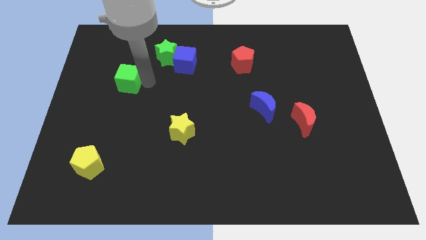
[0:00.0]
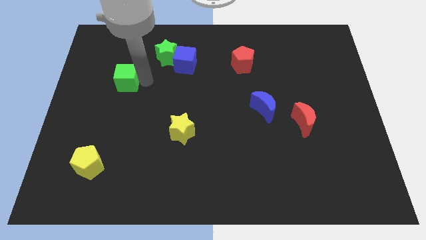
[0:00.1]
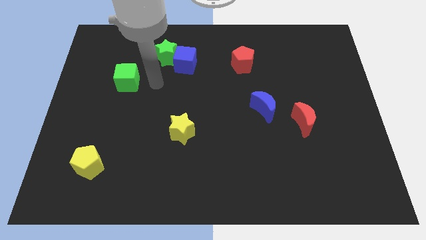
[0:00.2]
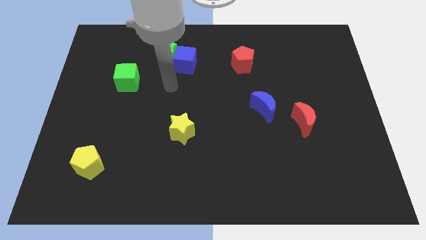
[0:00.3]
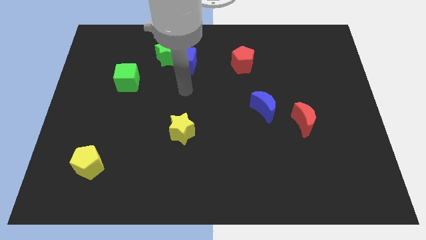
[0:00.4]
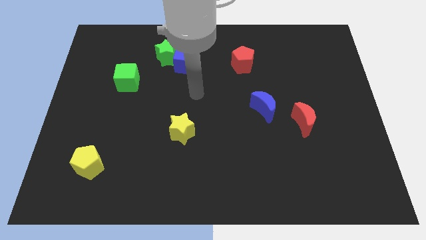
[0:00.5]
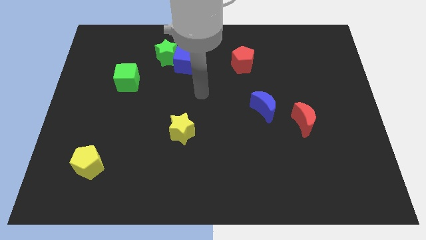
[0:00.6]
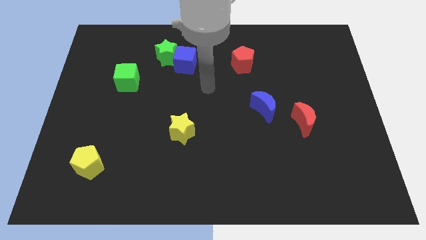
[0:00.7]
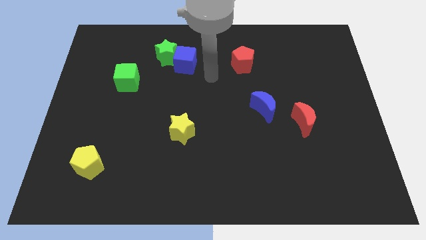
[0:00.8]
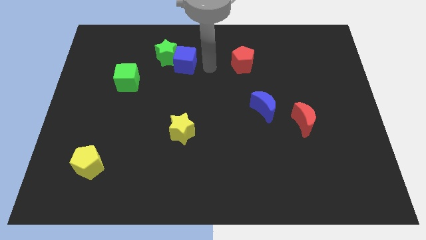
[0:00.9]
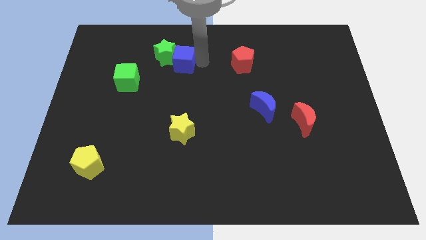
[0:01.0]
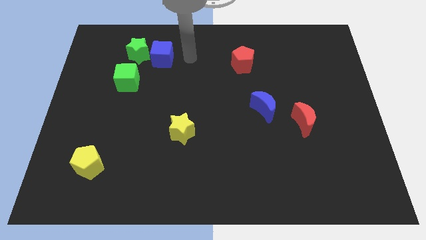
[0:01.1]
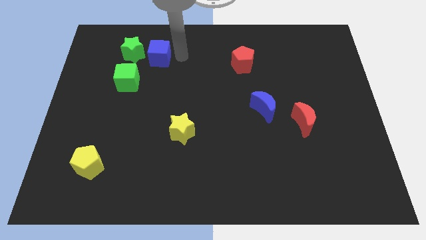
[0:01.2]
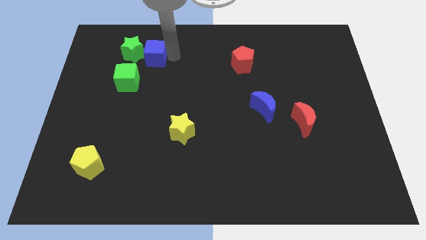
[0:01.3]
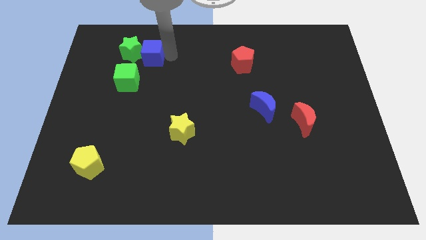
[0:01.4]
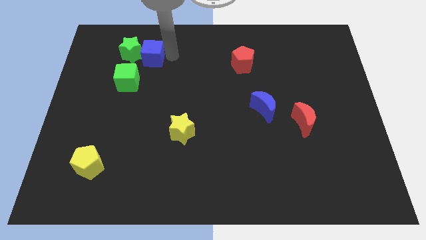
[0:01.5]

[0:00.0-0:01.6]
push the blue cube into the green star

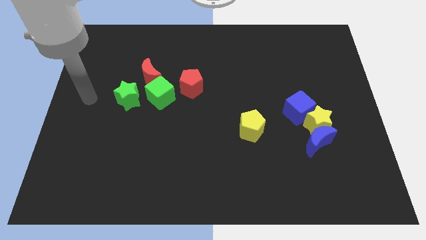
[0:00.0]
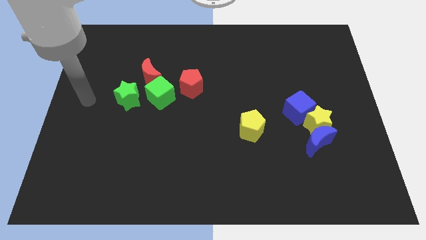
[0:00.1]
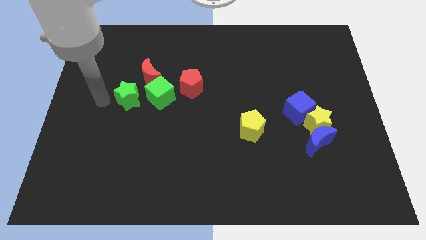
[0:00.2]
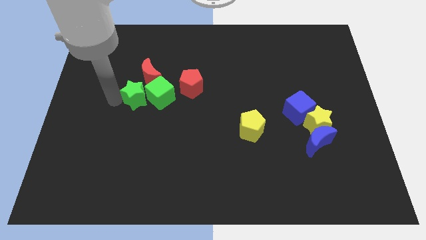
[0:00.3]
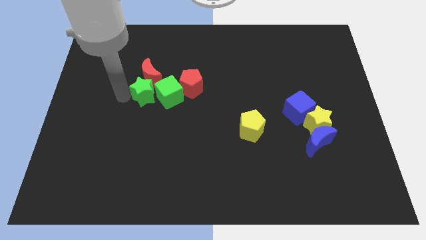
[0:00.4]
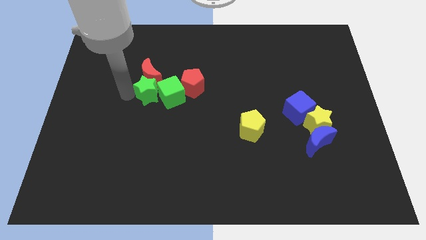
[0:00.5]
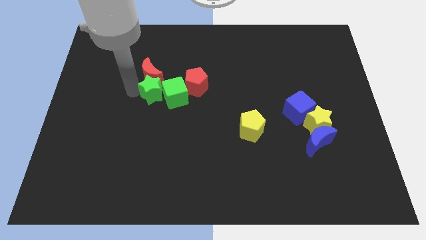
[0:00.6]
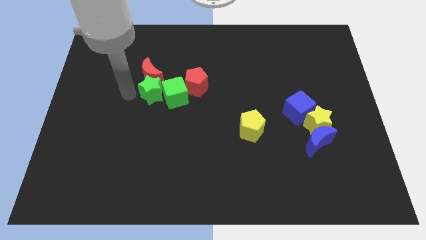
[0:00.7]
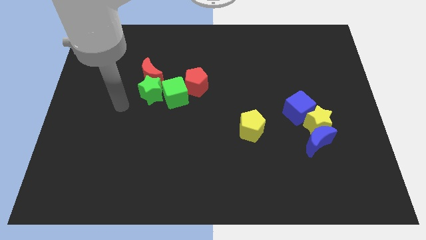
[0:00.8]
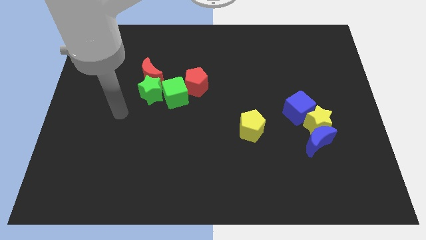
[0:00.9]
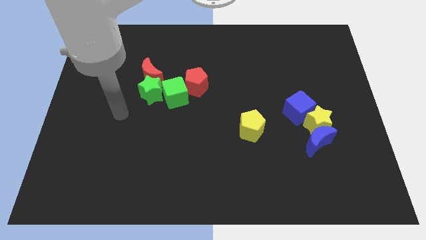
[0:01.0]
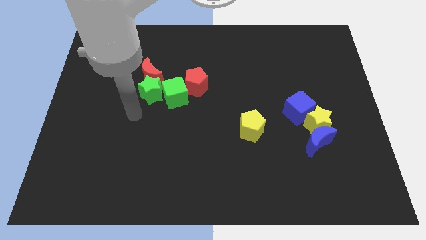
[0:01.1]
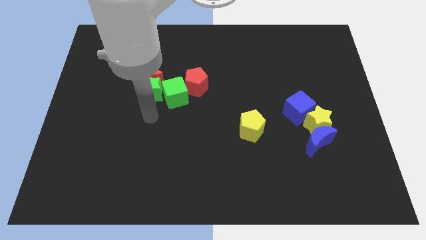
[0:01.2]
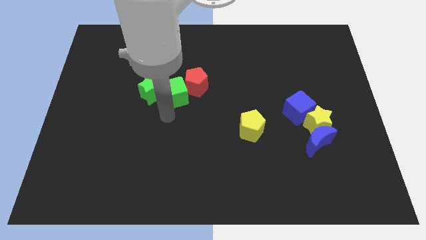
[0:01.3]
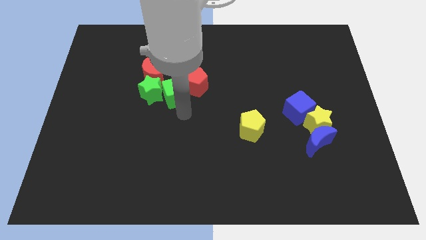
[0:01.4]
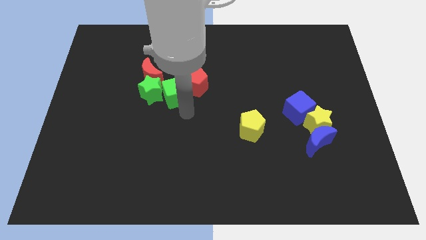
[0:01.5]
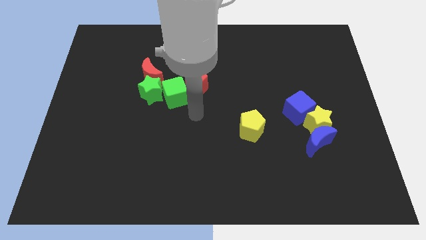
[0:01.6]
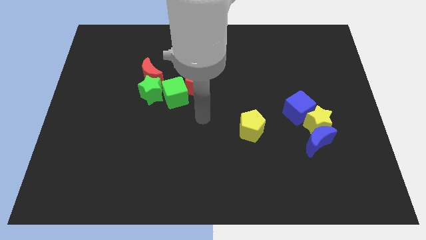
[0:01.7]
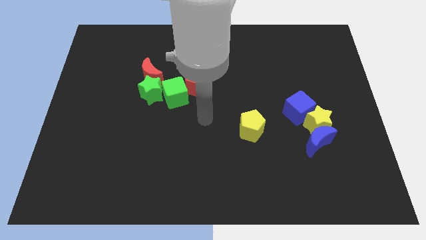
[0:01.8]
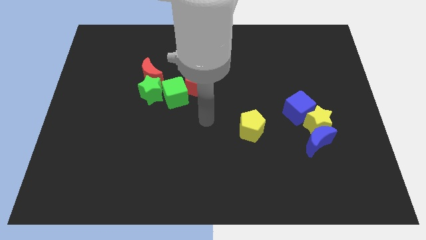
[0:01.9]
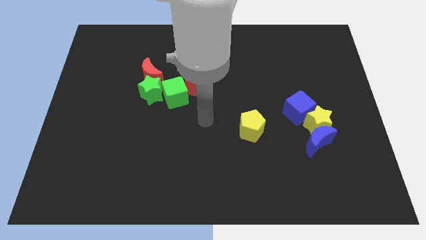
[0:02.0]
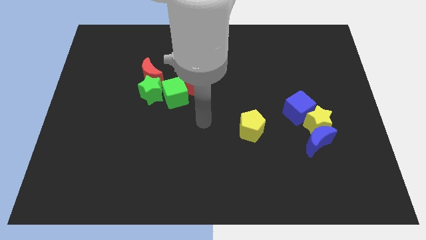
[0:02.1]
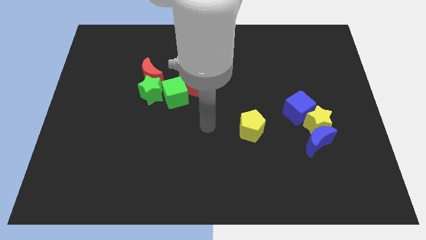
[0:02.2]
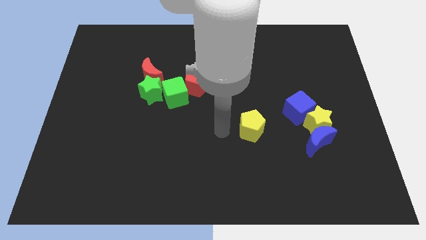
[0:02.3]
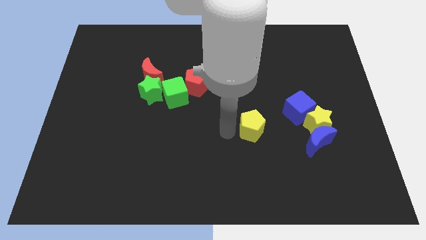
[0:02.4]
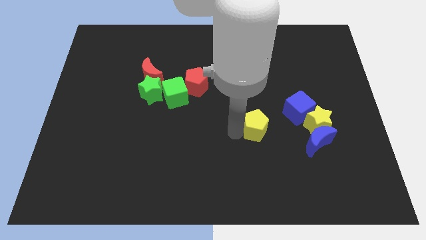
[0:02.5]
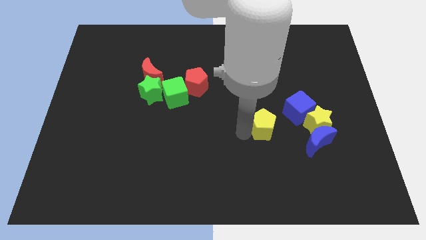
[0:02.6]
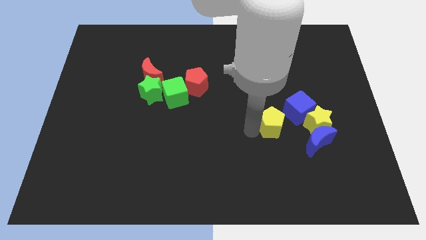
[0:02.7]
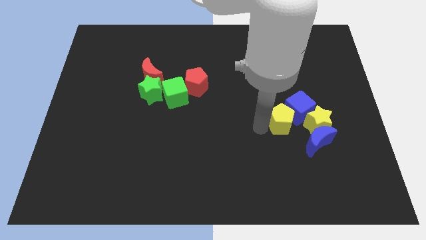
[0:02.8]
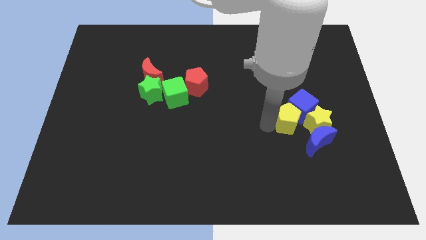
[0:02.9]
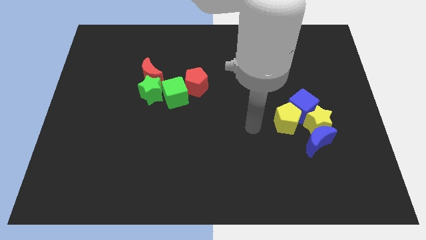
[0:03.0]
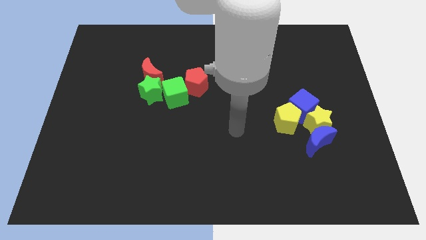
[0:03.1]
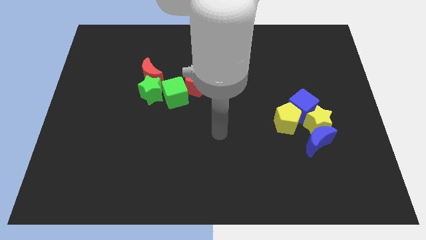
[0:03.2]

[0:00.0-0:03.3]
place the yellow pentagon towards the bottom left of the blue cube

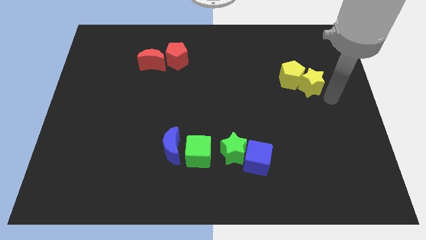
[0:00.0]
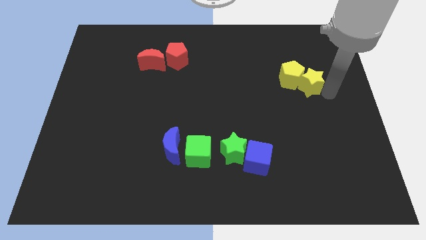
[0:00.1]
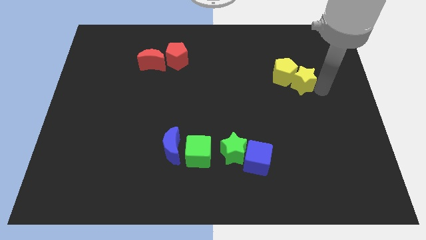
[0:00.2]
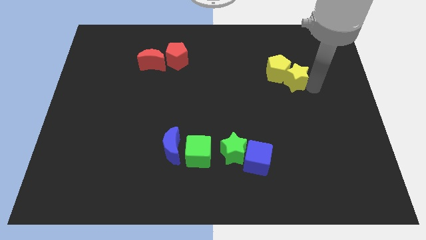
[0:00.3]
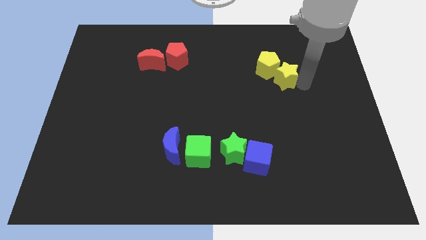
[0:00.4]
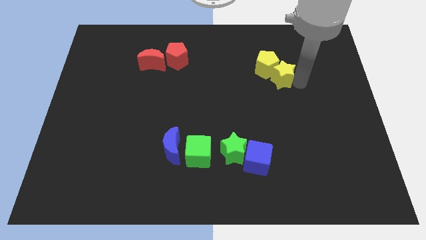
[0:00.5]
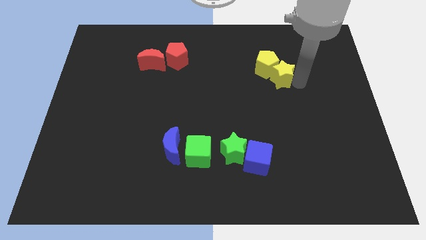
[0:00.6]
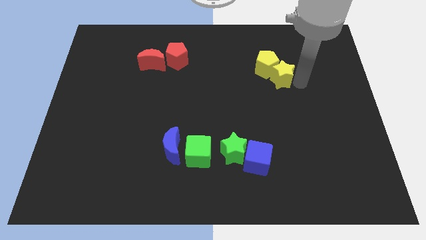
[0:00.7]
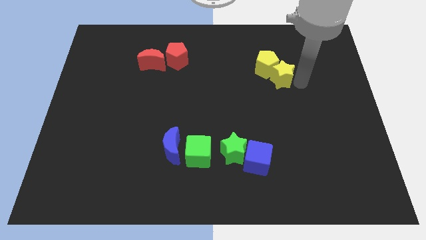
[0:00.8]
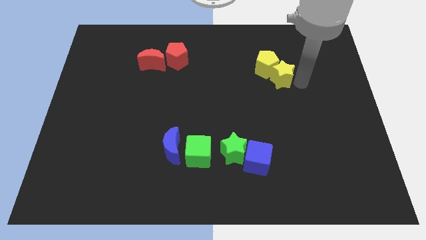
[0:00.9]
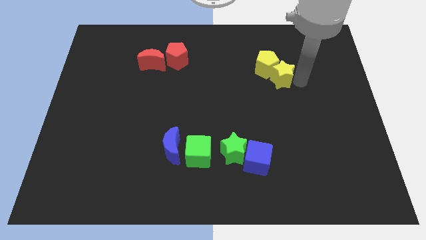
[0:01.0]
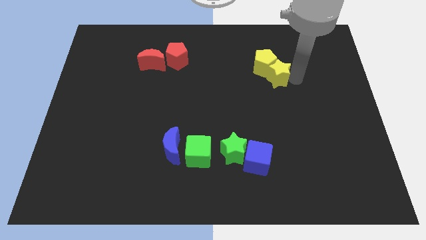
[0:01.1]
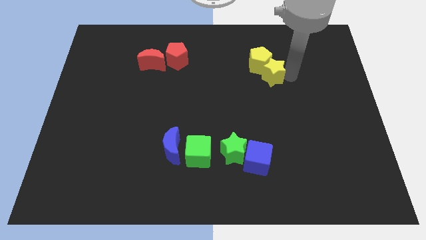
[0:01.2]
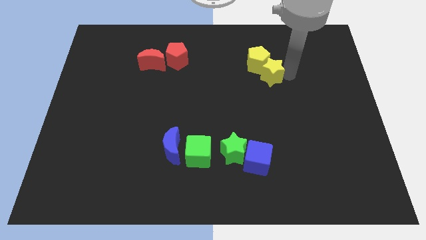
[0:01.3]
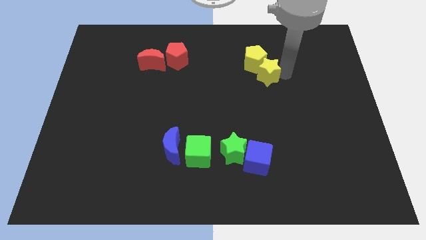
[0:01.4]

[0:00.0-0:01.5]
push the yellow blocks towards the top side of the board

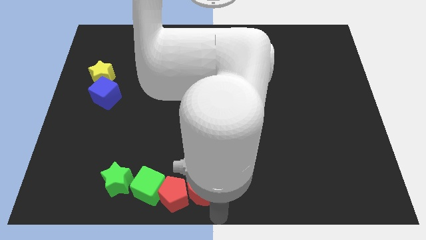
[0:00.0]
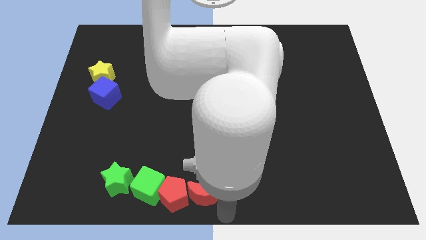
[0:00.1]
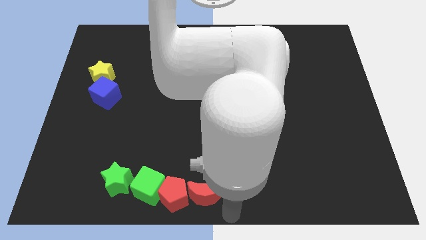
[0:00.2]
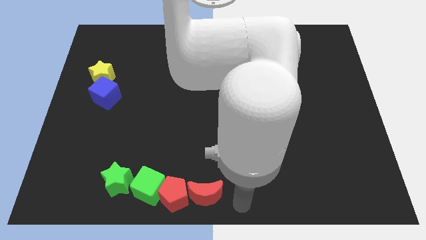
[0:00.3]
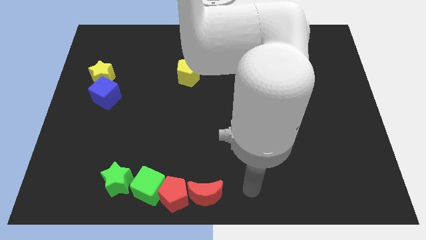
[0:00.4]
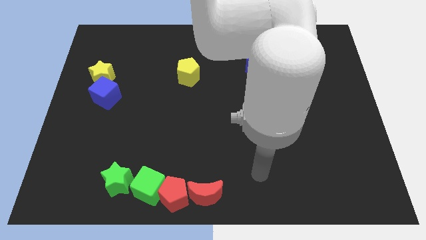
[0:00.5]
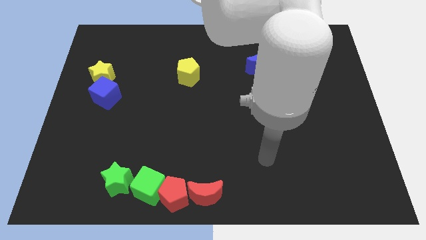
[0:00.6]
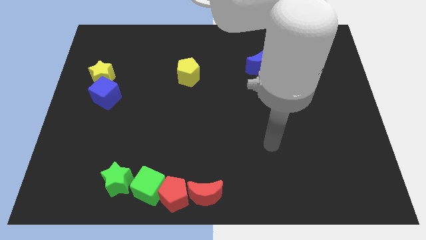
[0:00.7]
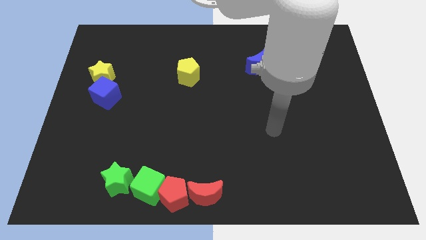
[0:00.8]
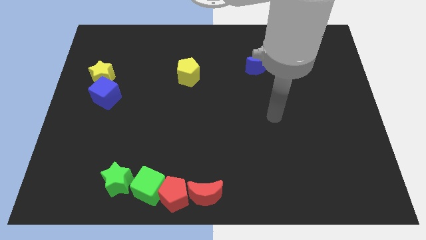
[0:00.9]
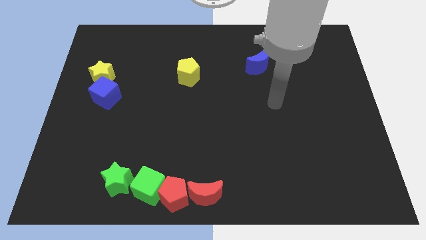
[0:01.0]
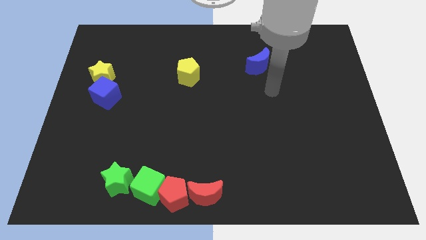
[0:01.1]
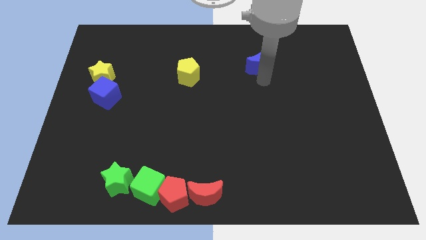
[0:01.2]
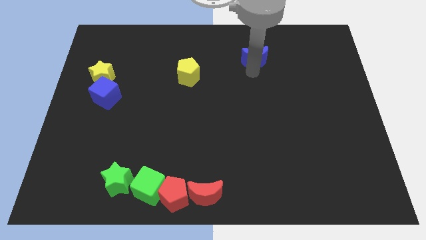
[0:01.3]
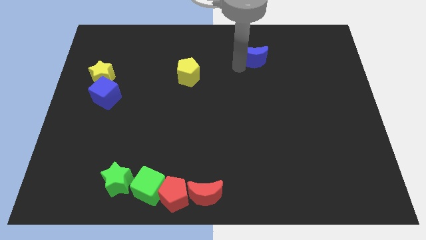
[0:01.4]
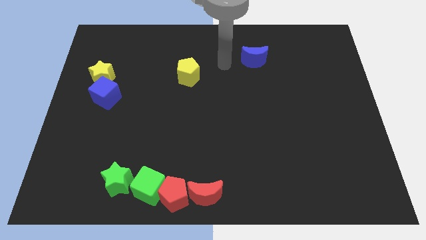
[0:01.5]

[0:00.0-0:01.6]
move your arm away from the red moon

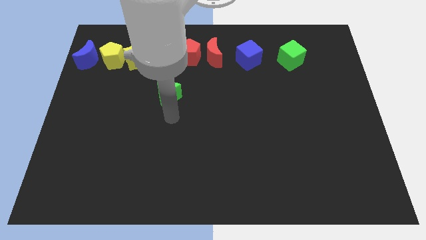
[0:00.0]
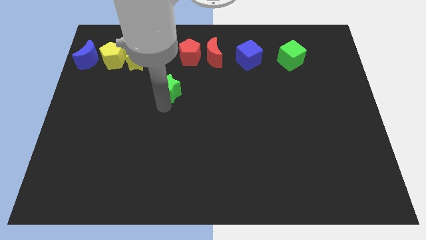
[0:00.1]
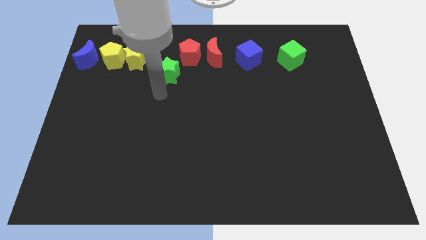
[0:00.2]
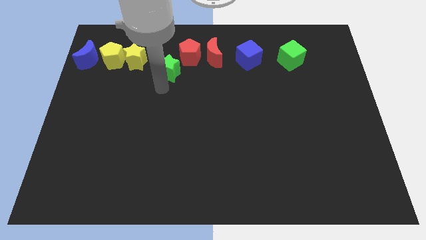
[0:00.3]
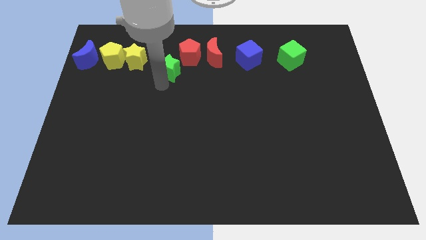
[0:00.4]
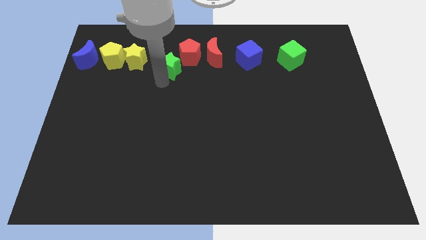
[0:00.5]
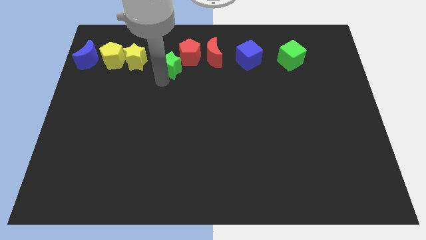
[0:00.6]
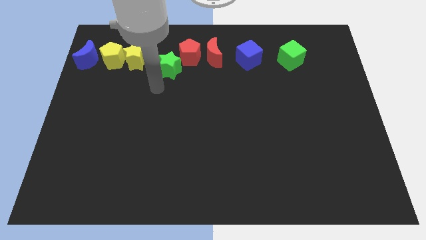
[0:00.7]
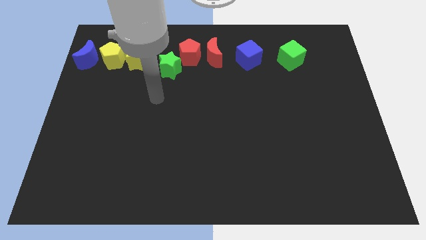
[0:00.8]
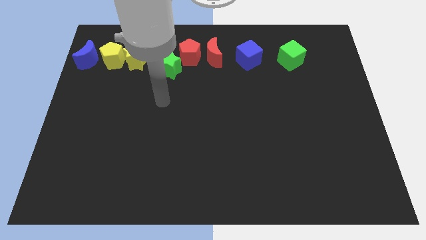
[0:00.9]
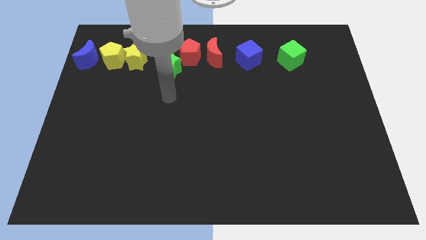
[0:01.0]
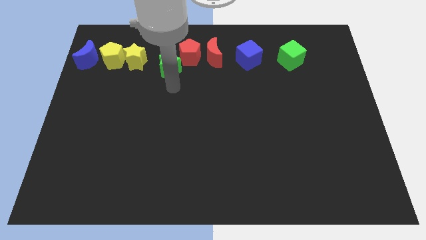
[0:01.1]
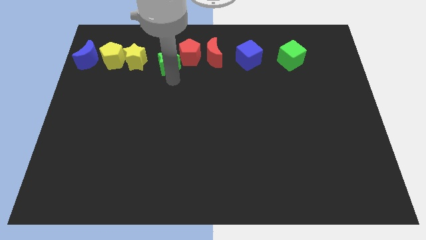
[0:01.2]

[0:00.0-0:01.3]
put the green star on the bottom left of the red pentagon
